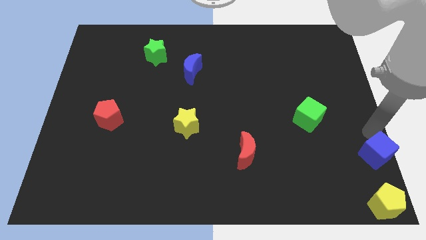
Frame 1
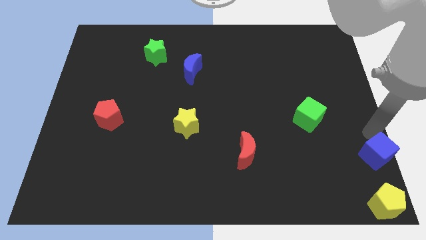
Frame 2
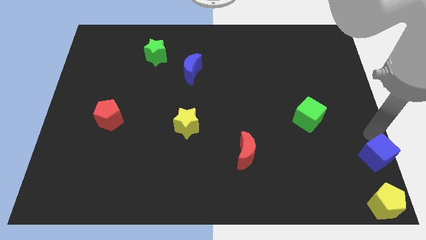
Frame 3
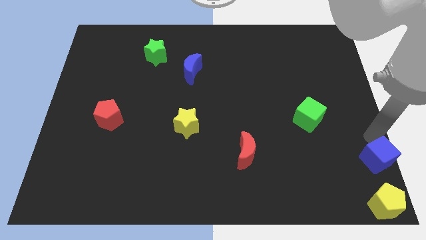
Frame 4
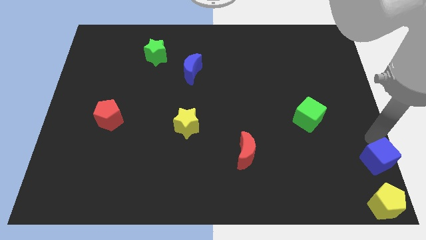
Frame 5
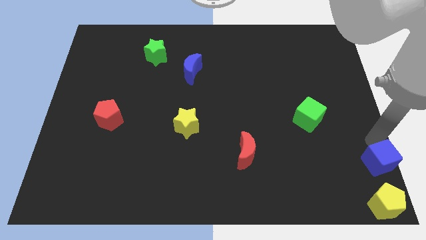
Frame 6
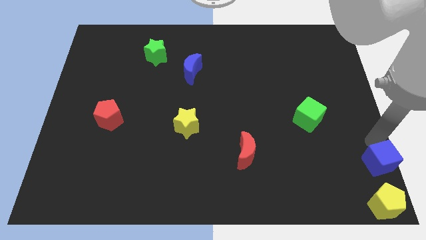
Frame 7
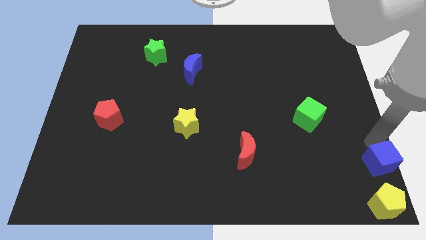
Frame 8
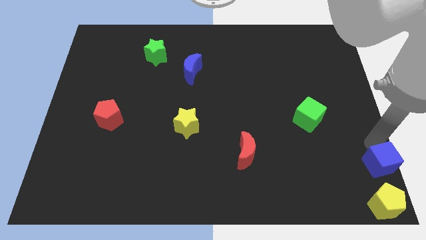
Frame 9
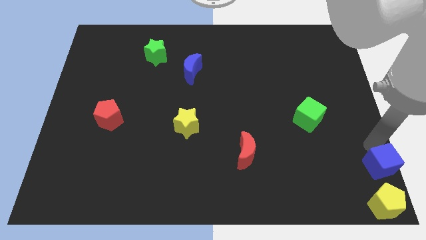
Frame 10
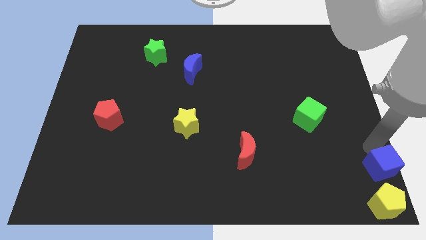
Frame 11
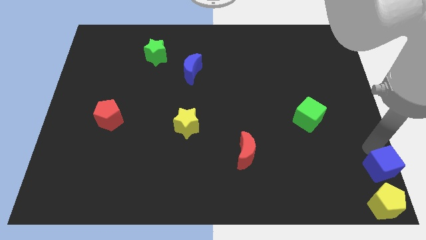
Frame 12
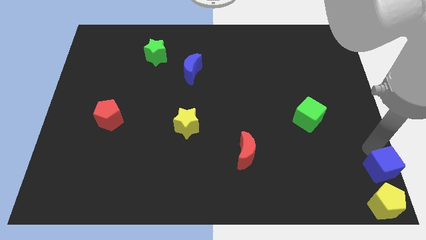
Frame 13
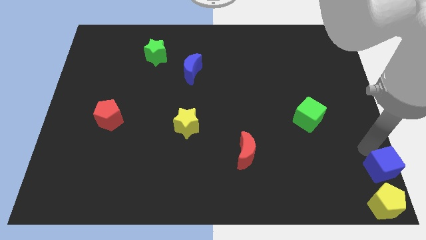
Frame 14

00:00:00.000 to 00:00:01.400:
push the blue cube and place it above the yellow pentagon

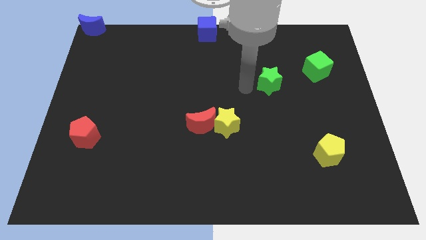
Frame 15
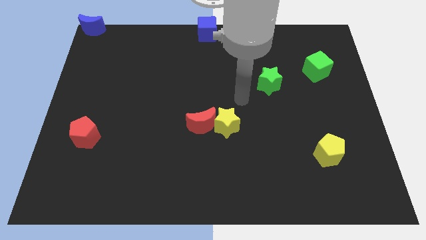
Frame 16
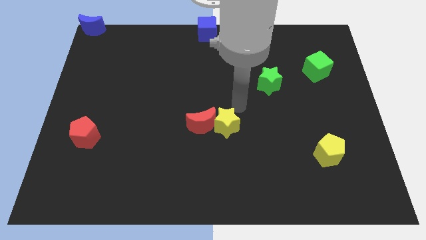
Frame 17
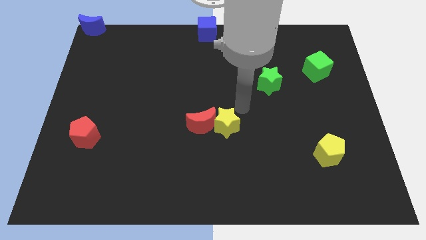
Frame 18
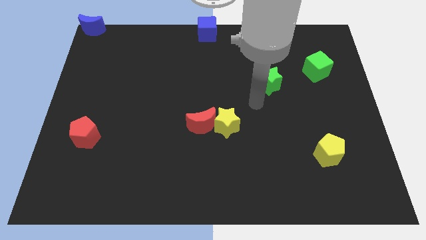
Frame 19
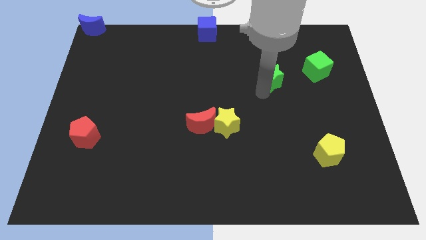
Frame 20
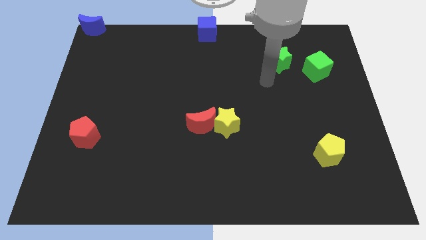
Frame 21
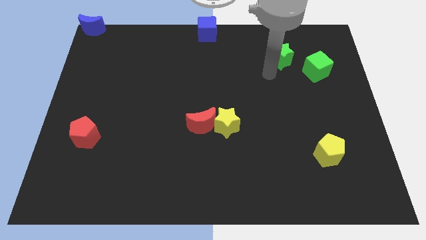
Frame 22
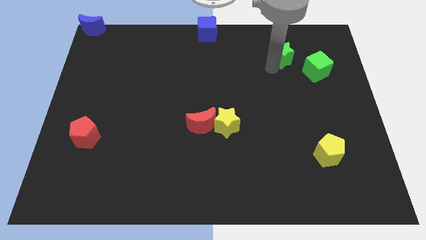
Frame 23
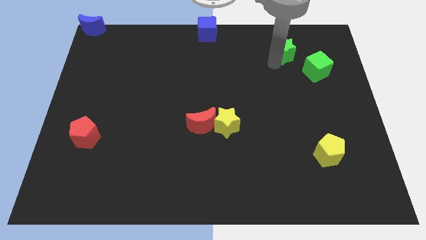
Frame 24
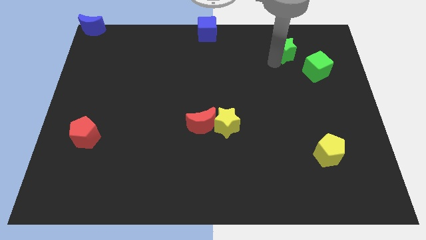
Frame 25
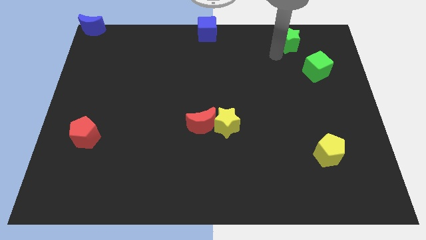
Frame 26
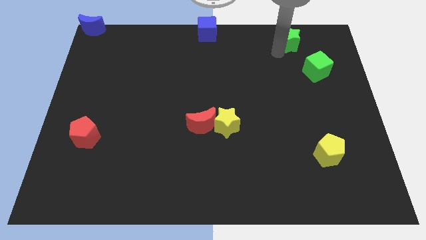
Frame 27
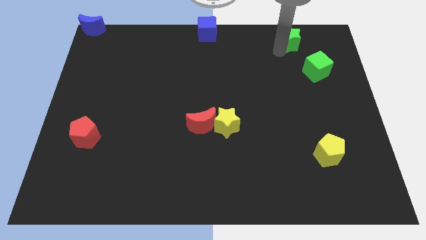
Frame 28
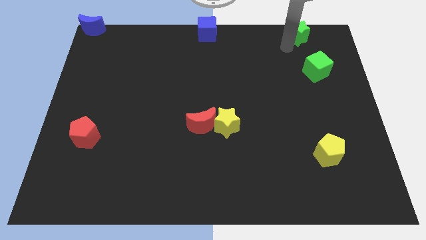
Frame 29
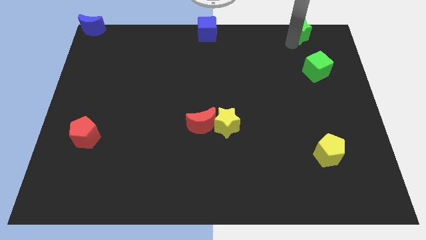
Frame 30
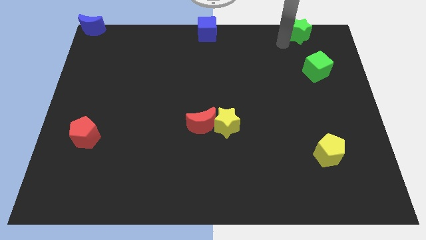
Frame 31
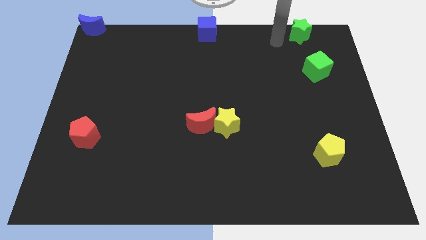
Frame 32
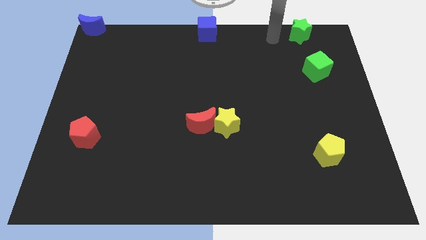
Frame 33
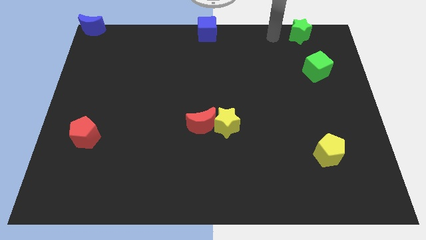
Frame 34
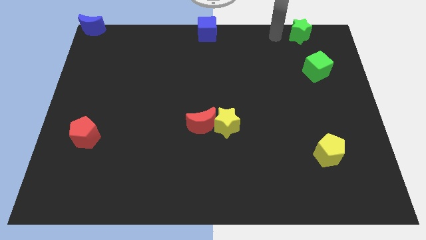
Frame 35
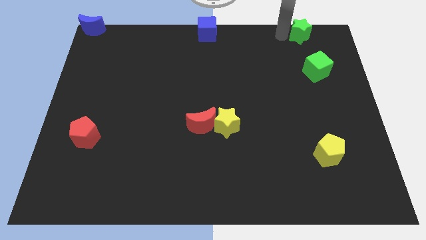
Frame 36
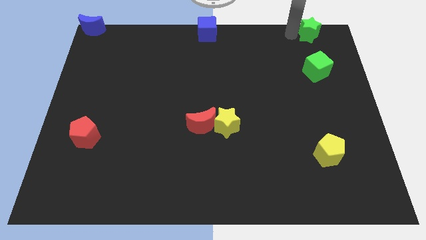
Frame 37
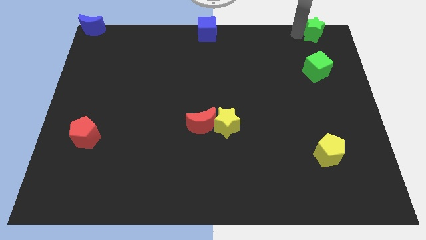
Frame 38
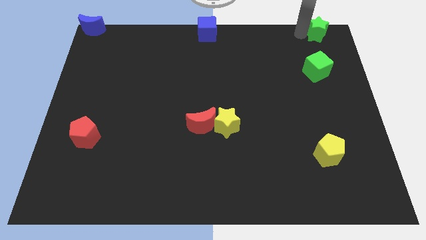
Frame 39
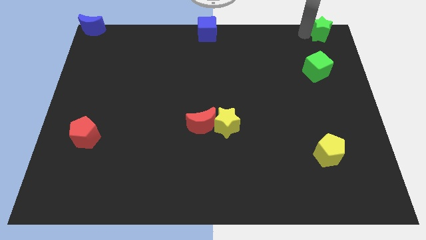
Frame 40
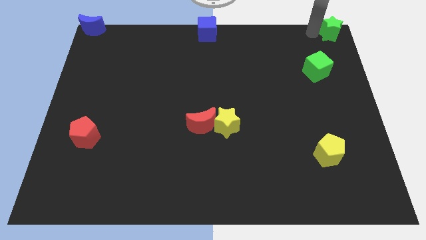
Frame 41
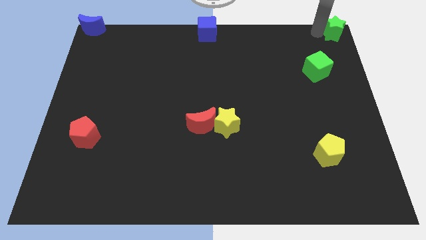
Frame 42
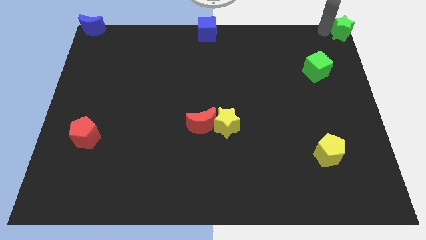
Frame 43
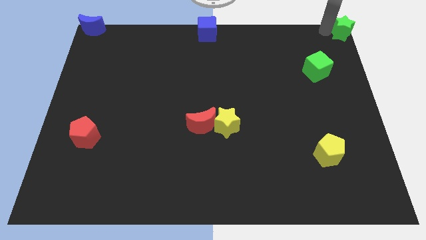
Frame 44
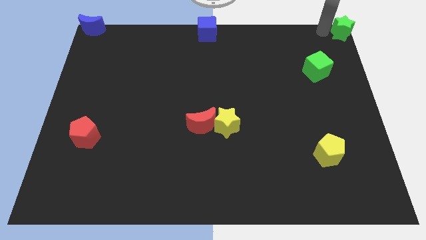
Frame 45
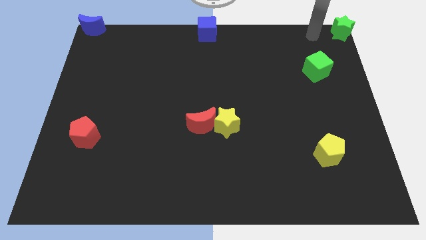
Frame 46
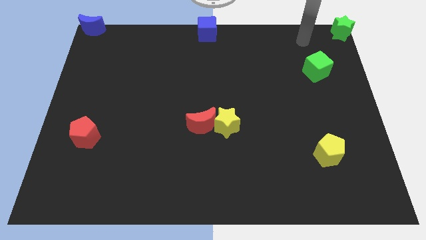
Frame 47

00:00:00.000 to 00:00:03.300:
place the green star to the top right corner of the board

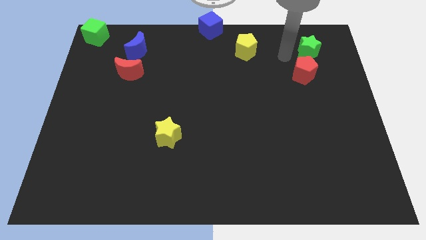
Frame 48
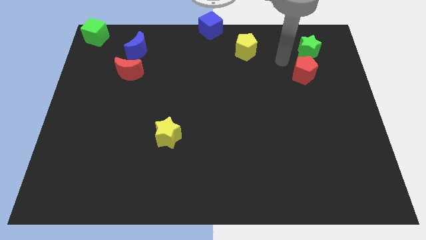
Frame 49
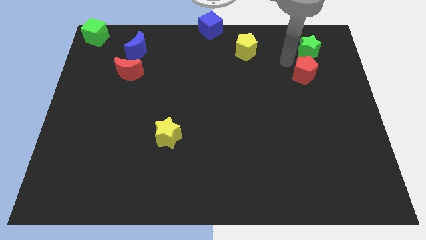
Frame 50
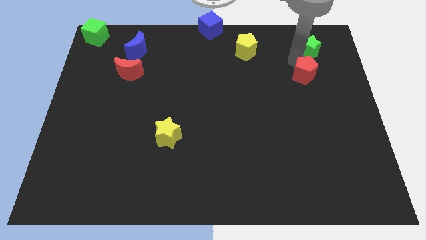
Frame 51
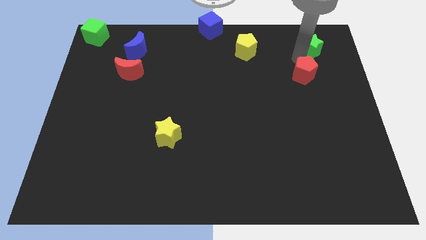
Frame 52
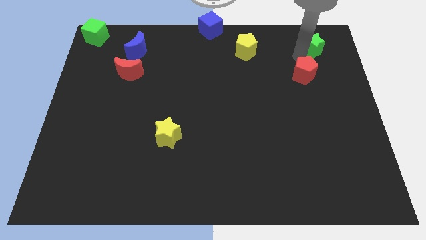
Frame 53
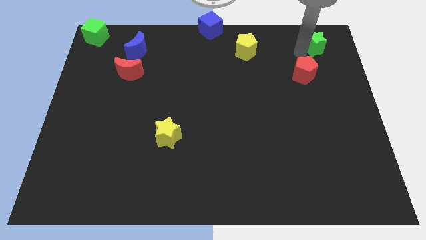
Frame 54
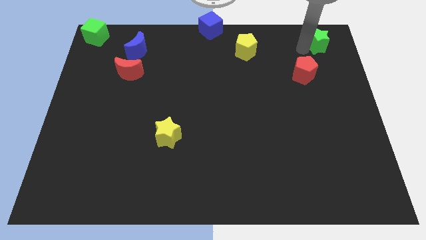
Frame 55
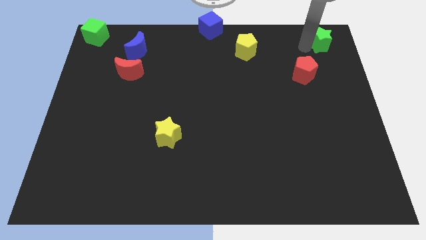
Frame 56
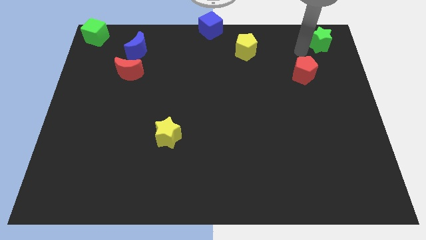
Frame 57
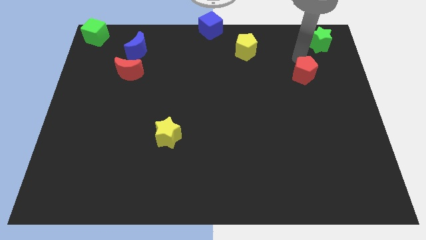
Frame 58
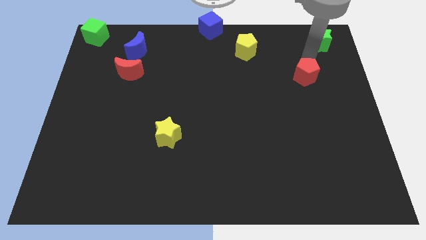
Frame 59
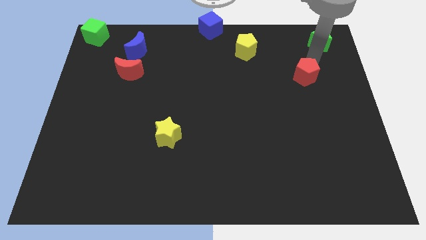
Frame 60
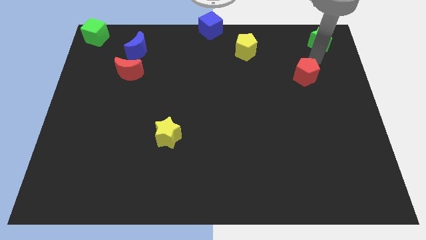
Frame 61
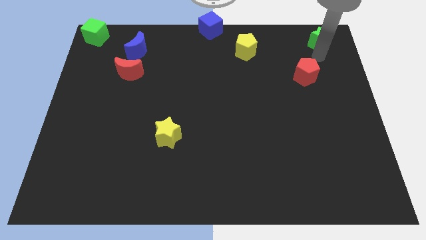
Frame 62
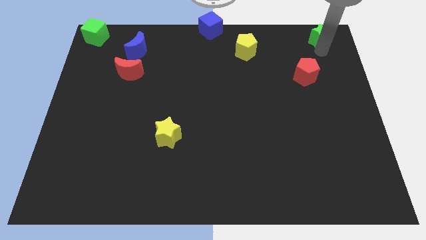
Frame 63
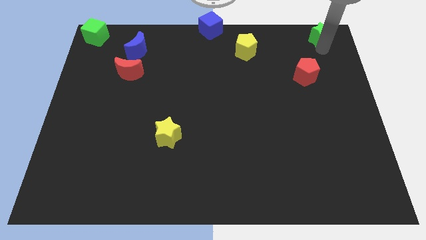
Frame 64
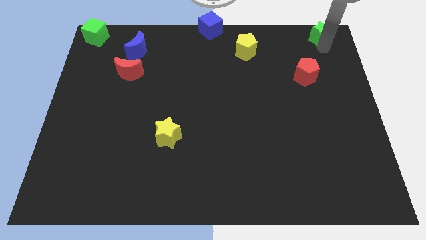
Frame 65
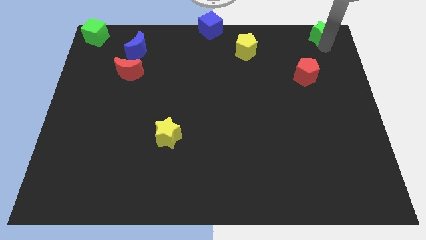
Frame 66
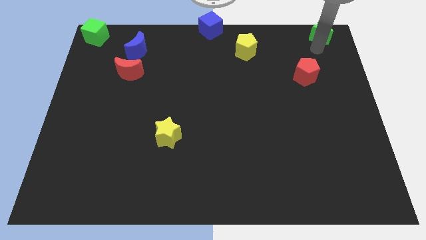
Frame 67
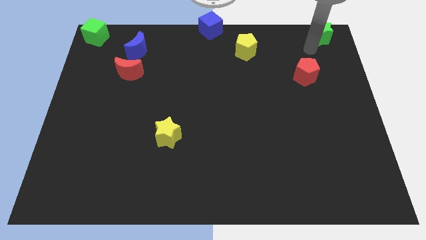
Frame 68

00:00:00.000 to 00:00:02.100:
move green star to the top right

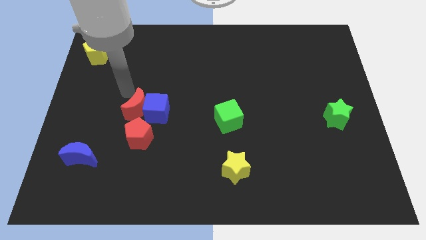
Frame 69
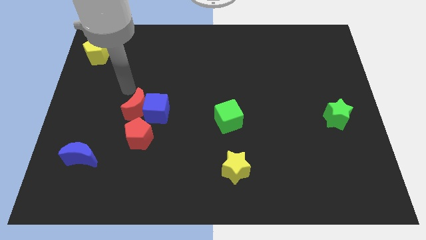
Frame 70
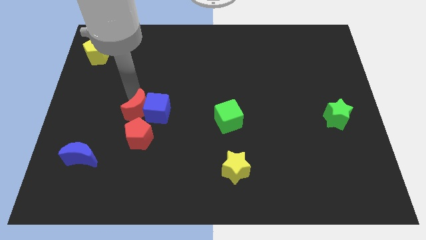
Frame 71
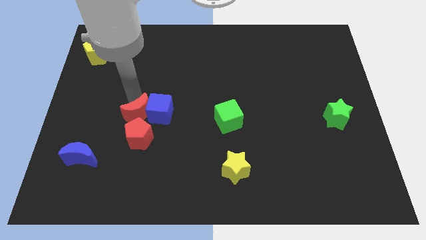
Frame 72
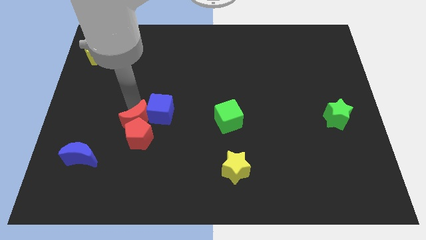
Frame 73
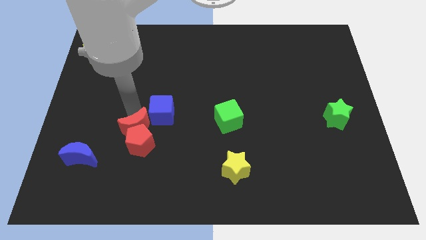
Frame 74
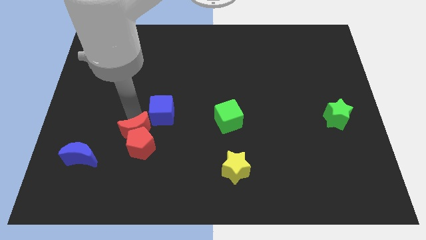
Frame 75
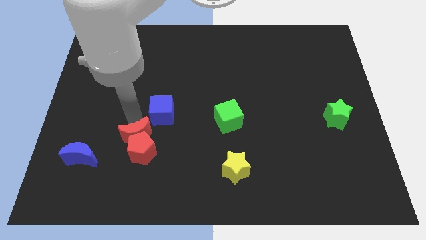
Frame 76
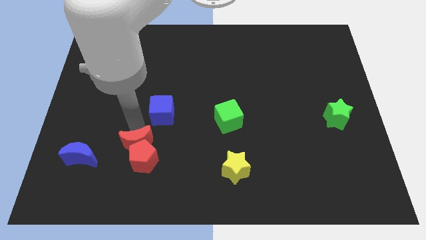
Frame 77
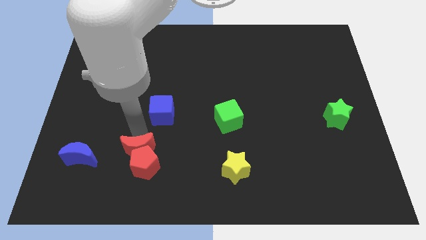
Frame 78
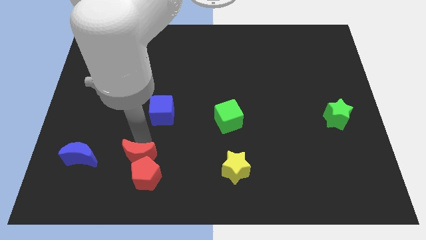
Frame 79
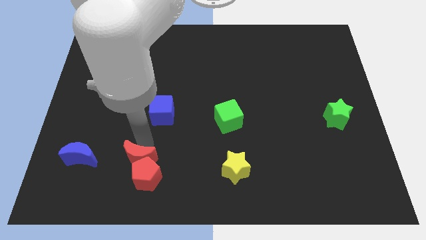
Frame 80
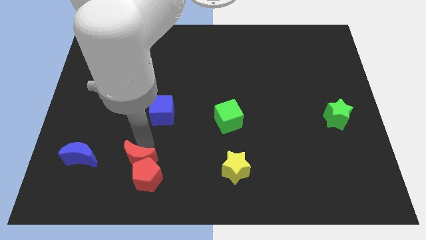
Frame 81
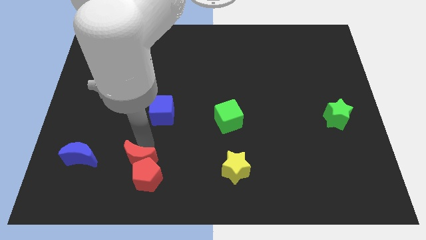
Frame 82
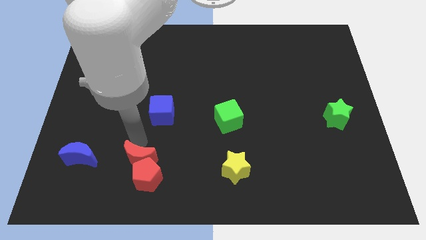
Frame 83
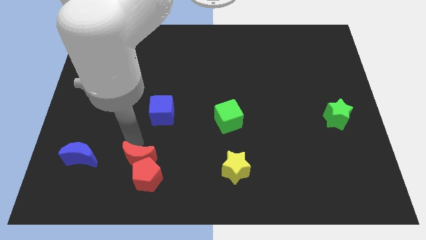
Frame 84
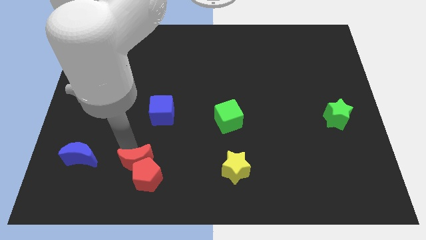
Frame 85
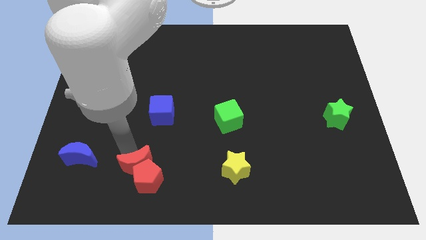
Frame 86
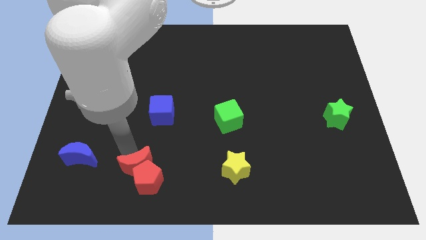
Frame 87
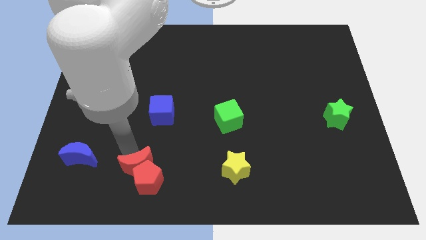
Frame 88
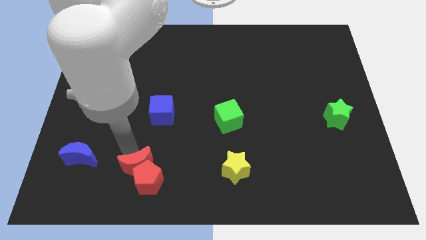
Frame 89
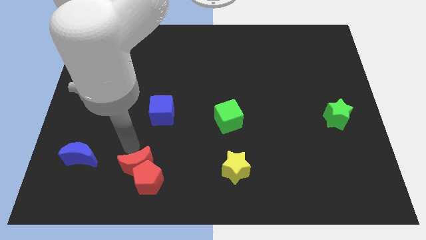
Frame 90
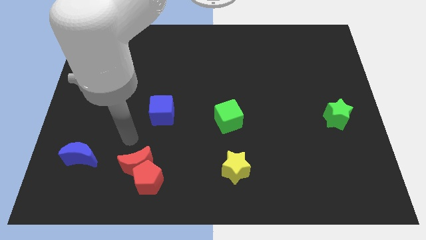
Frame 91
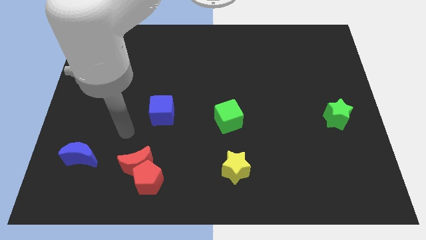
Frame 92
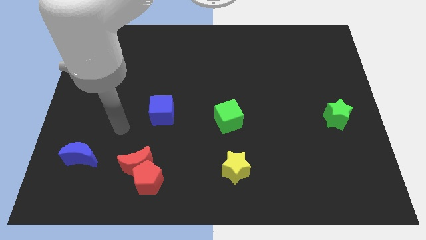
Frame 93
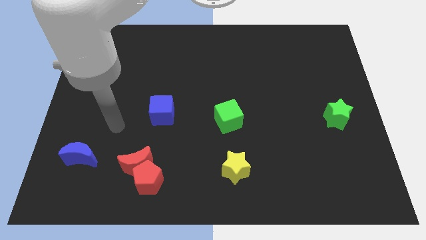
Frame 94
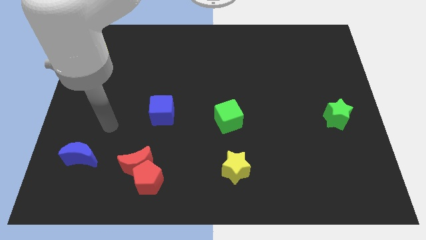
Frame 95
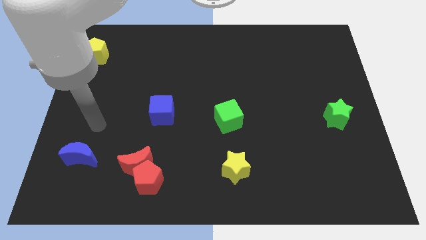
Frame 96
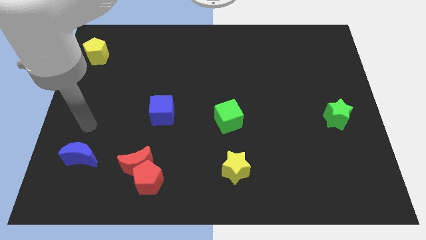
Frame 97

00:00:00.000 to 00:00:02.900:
push the red blocks to bottom of the board
